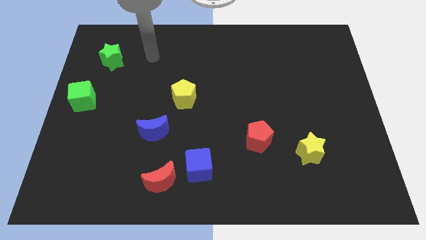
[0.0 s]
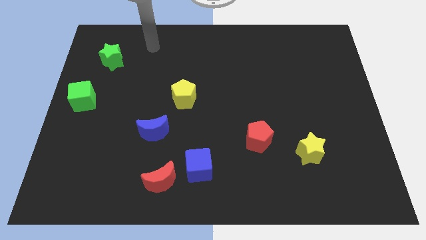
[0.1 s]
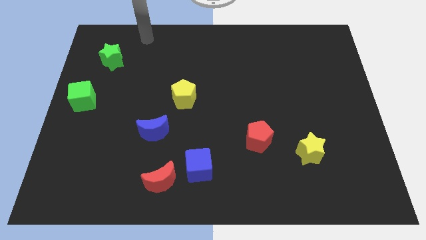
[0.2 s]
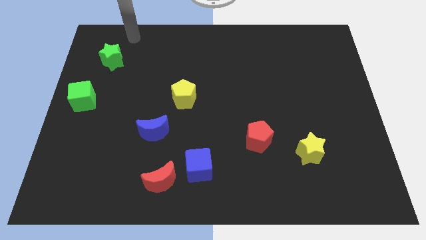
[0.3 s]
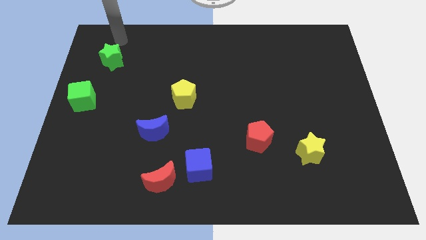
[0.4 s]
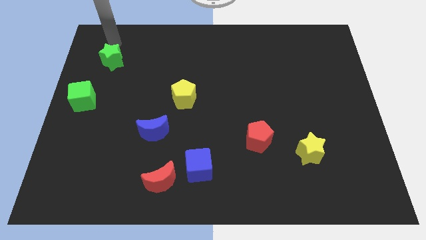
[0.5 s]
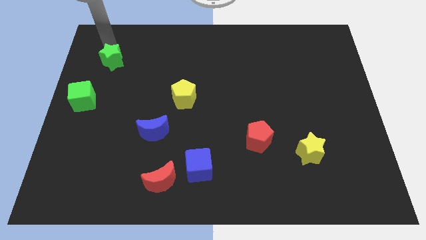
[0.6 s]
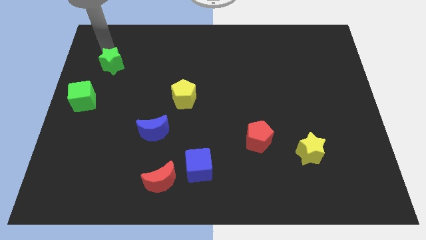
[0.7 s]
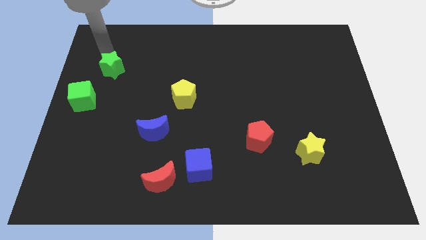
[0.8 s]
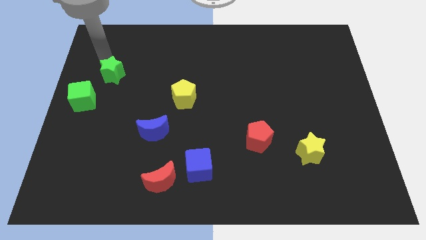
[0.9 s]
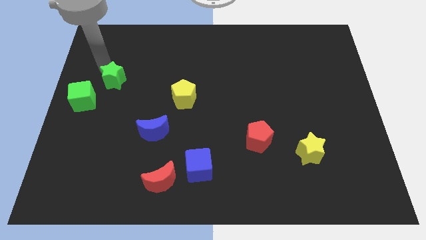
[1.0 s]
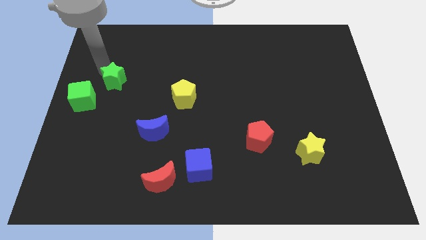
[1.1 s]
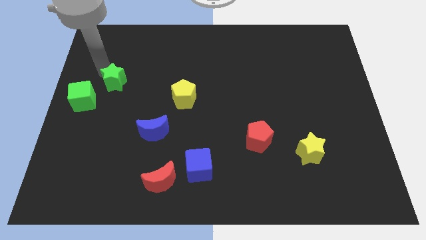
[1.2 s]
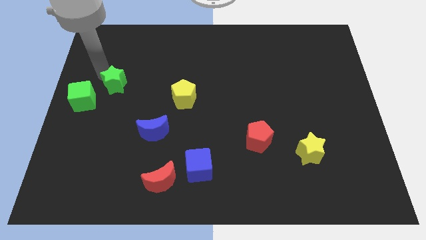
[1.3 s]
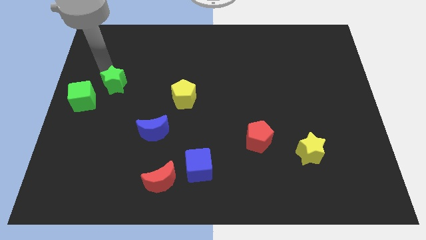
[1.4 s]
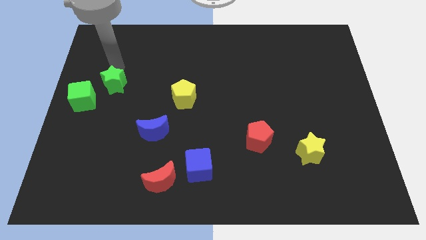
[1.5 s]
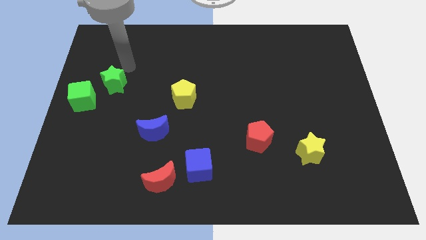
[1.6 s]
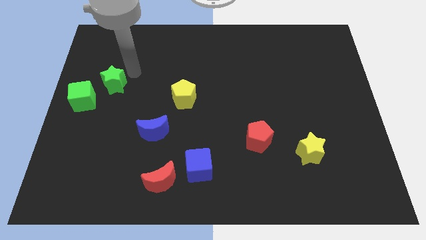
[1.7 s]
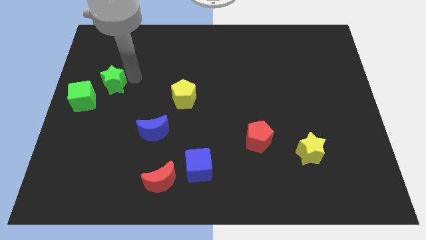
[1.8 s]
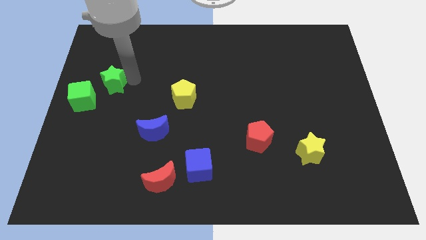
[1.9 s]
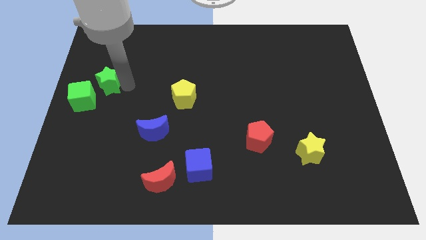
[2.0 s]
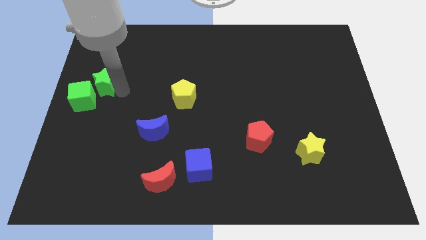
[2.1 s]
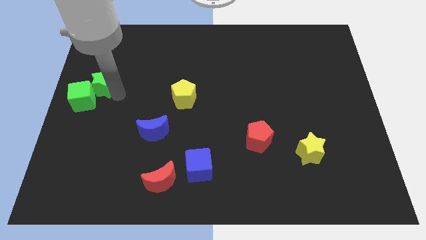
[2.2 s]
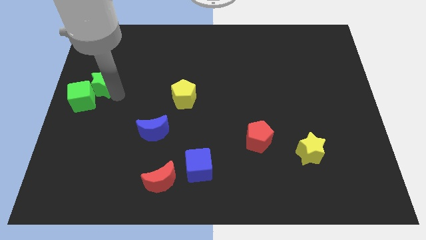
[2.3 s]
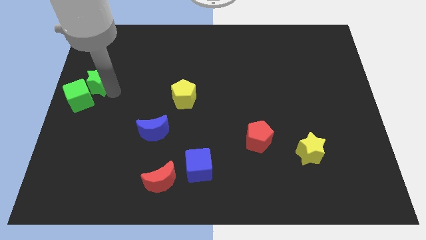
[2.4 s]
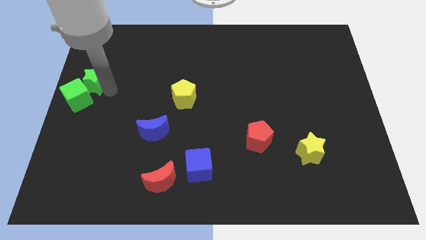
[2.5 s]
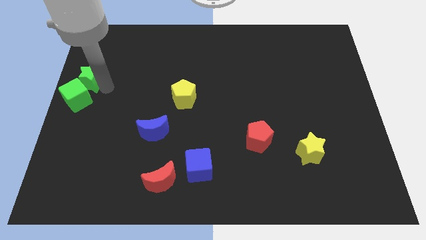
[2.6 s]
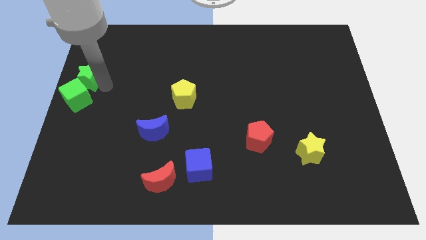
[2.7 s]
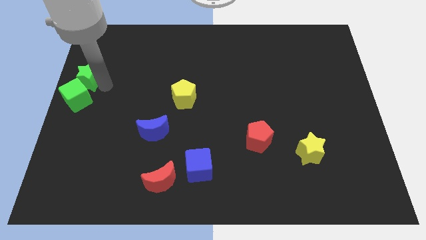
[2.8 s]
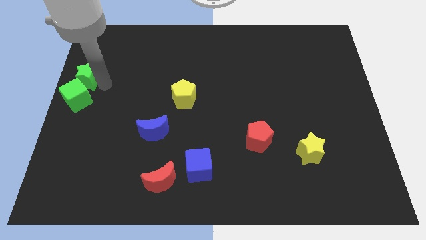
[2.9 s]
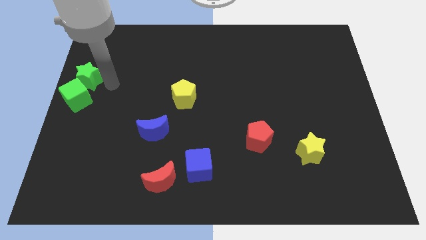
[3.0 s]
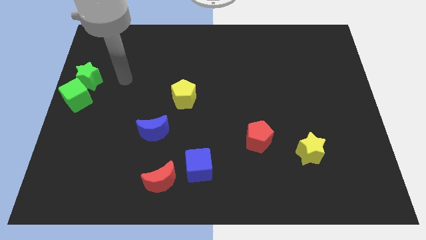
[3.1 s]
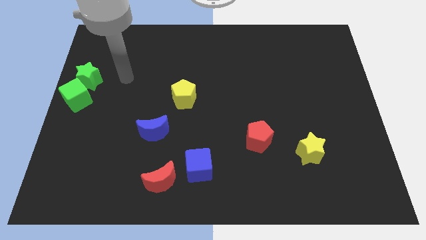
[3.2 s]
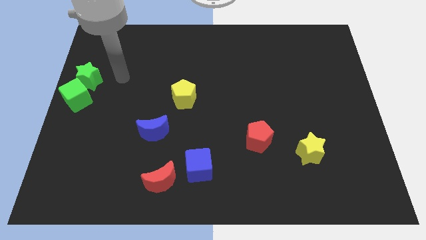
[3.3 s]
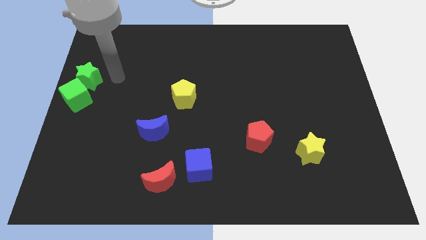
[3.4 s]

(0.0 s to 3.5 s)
place green star to the top of green cube

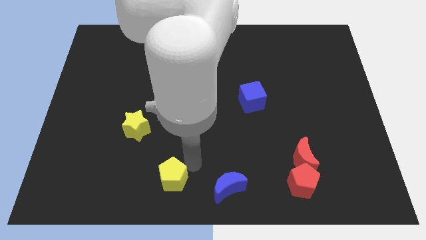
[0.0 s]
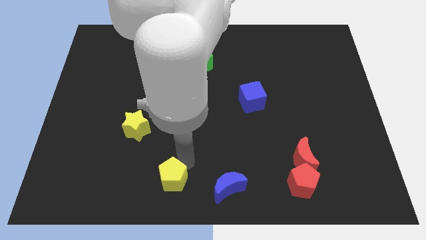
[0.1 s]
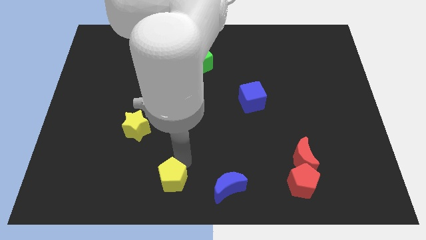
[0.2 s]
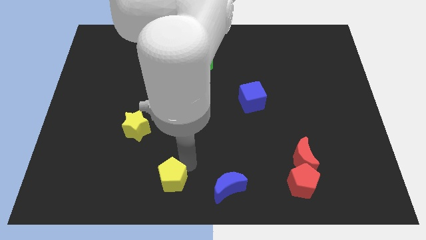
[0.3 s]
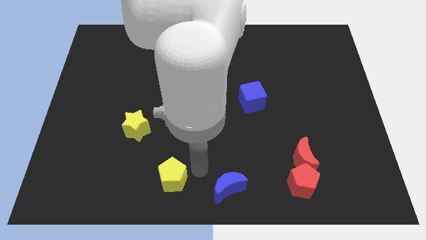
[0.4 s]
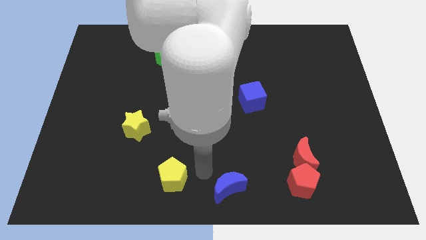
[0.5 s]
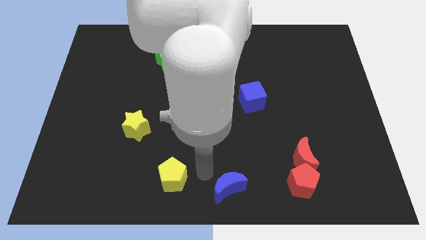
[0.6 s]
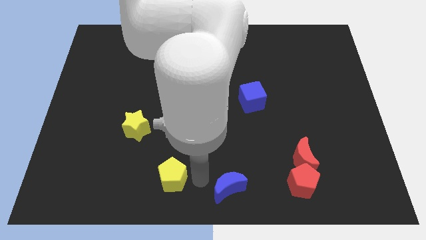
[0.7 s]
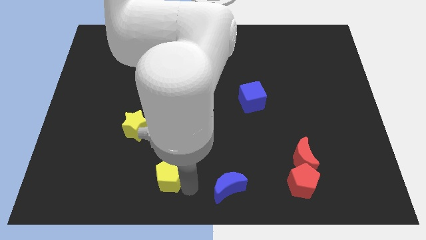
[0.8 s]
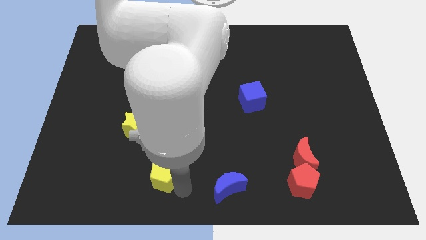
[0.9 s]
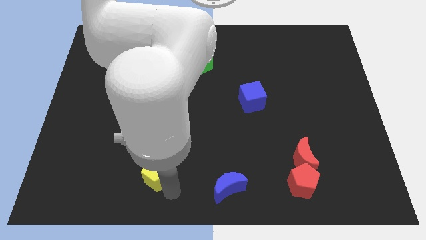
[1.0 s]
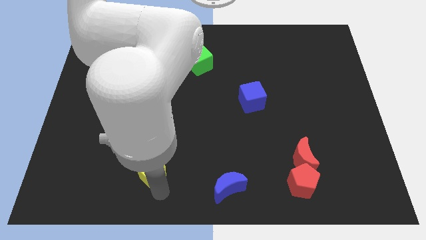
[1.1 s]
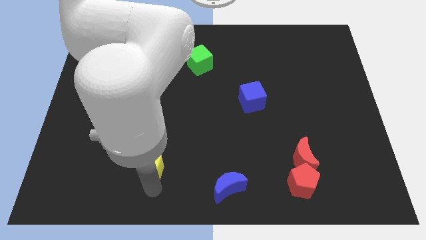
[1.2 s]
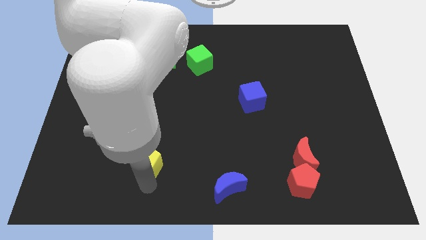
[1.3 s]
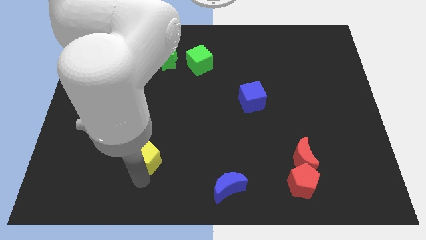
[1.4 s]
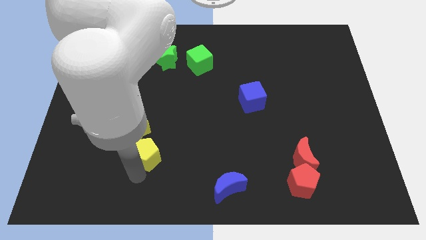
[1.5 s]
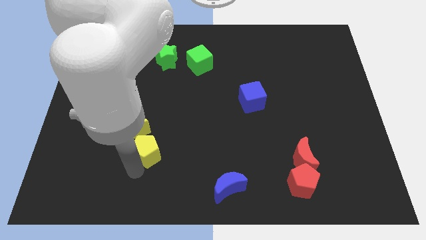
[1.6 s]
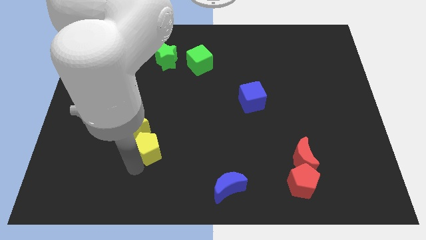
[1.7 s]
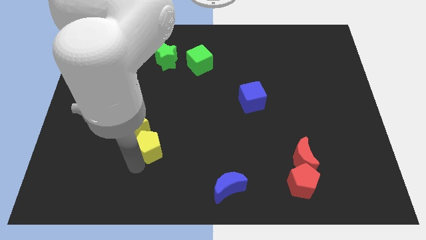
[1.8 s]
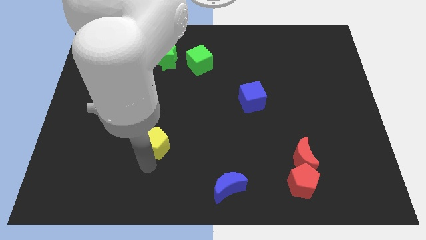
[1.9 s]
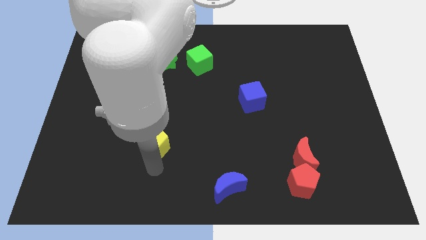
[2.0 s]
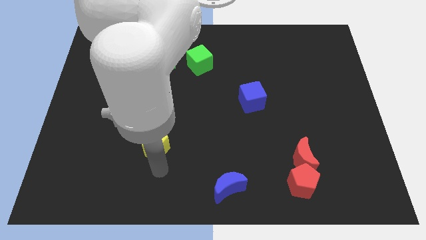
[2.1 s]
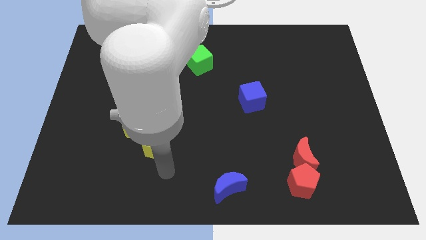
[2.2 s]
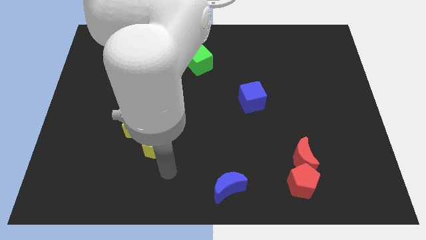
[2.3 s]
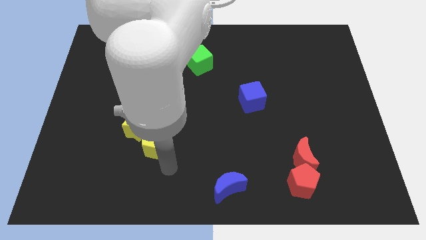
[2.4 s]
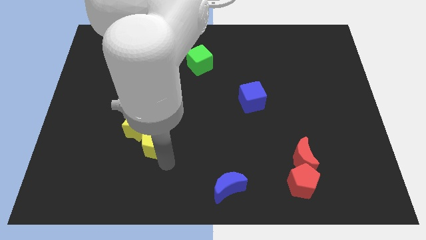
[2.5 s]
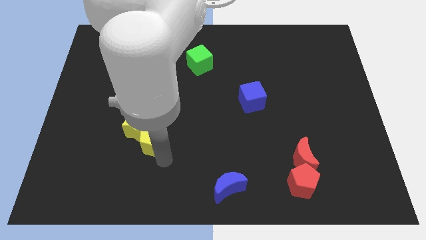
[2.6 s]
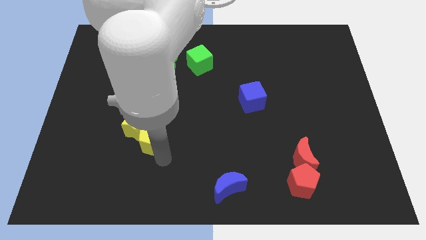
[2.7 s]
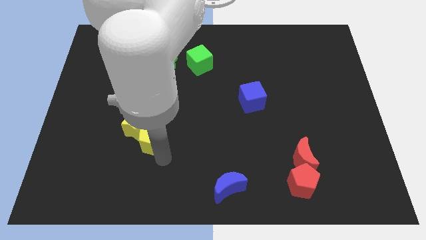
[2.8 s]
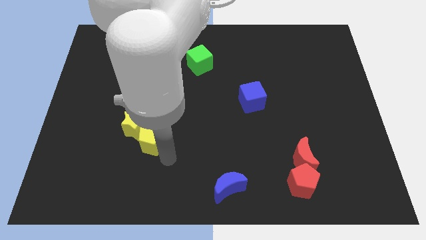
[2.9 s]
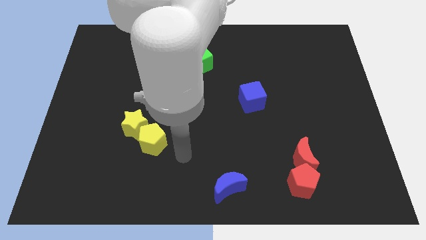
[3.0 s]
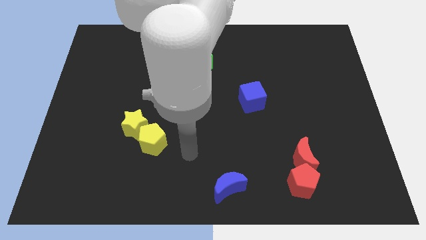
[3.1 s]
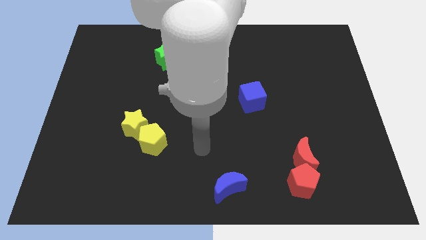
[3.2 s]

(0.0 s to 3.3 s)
move the yellow pentagon into the yellow star

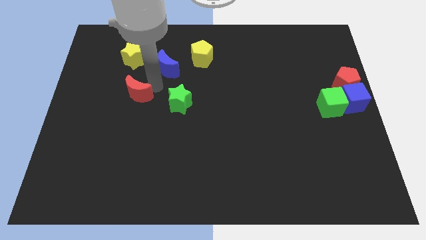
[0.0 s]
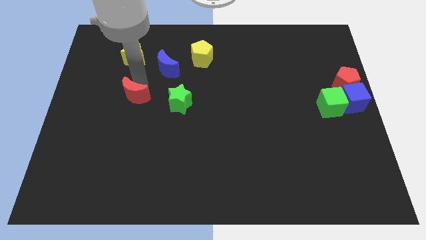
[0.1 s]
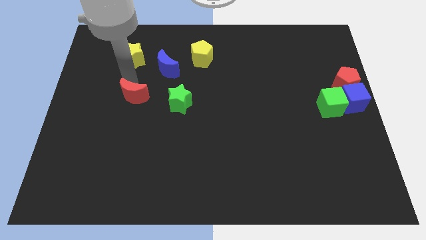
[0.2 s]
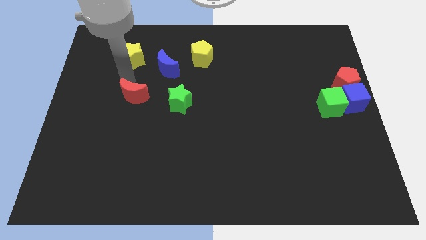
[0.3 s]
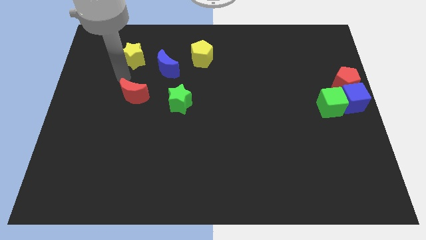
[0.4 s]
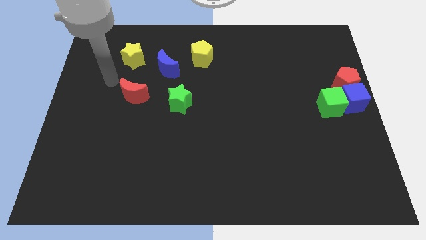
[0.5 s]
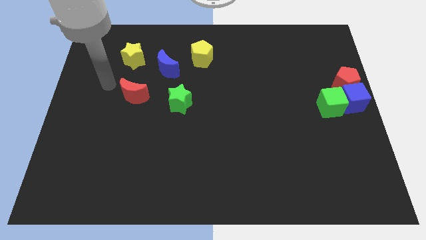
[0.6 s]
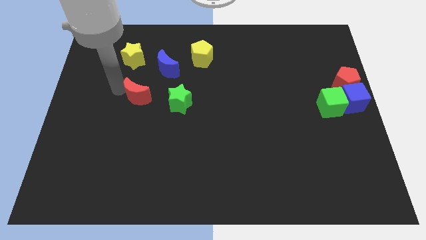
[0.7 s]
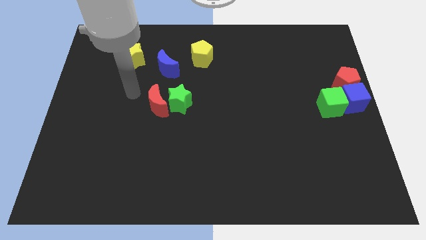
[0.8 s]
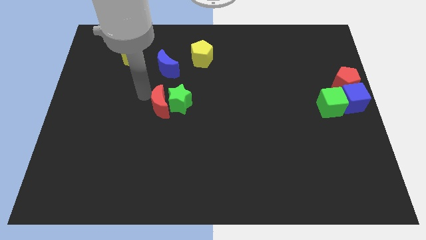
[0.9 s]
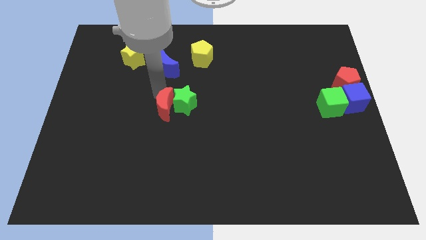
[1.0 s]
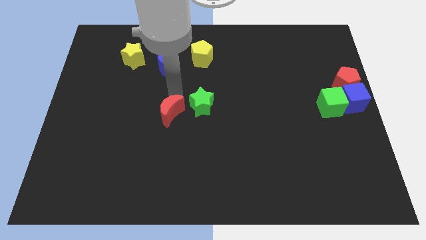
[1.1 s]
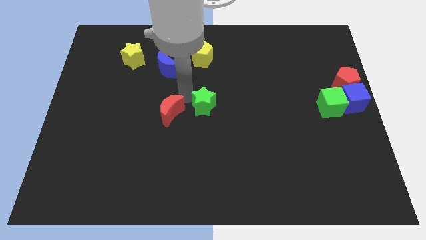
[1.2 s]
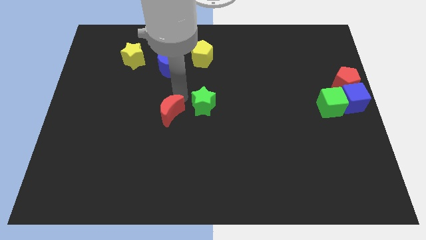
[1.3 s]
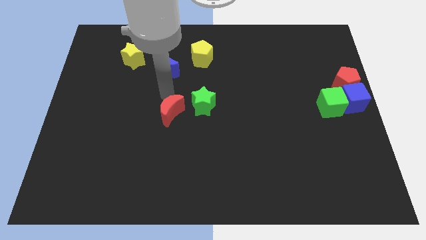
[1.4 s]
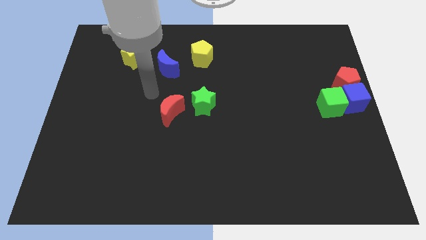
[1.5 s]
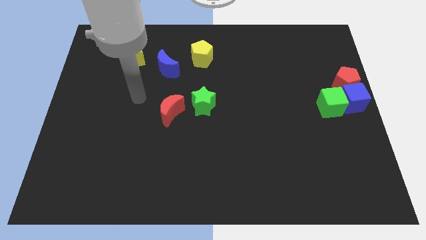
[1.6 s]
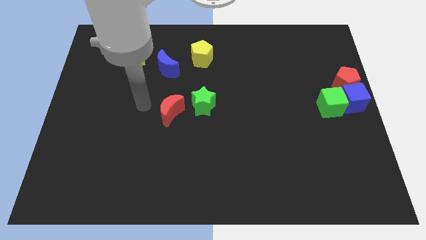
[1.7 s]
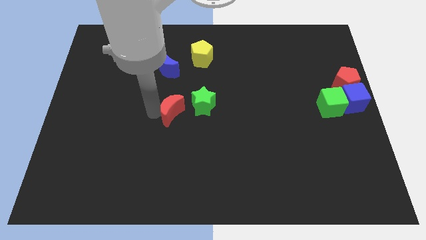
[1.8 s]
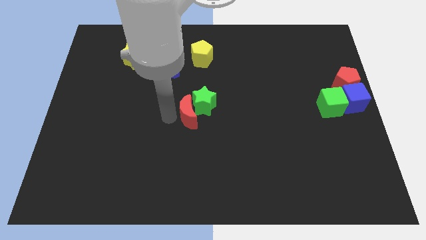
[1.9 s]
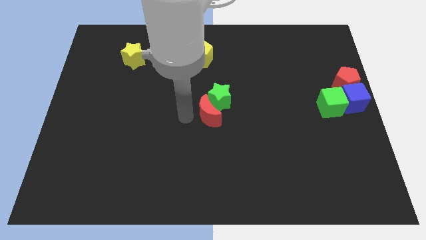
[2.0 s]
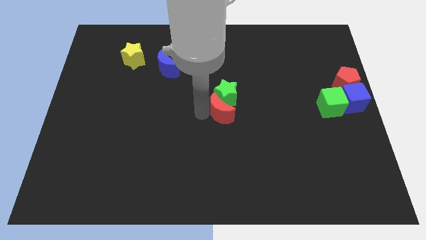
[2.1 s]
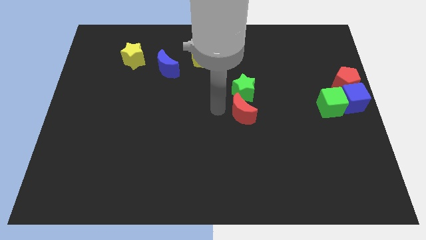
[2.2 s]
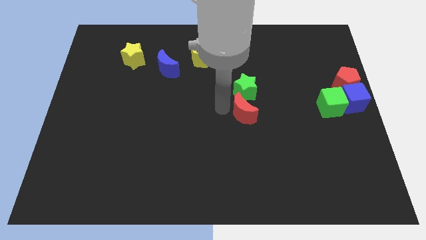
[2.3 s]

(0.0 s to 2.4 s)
push the red crescent into the green star
